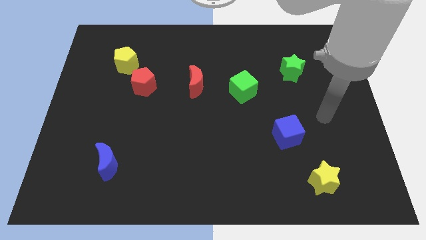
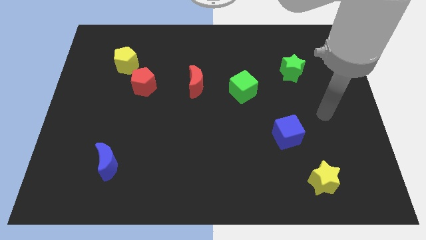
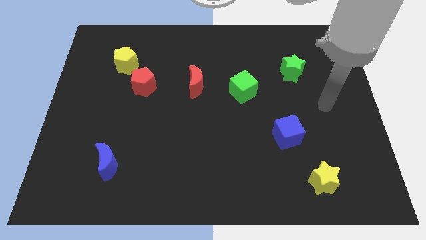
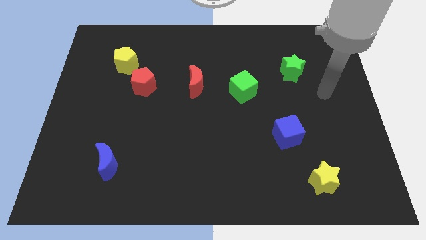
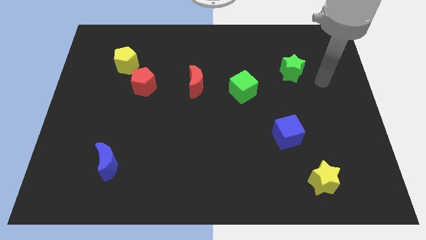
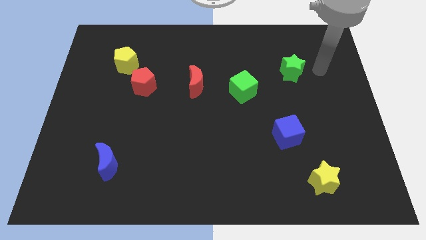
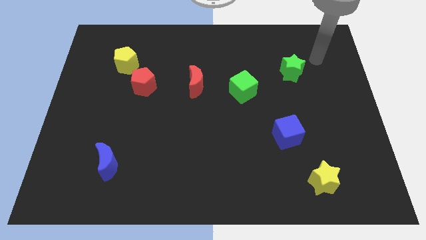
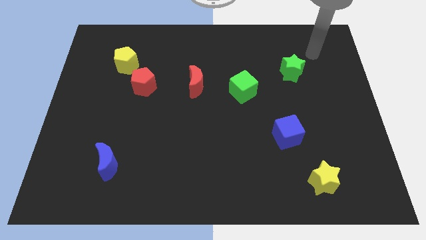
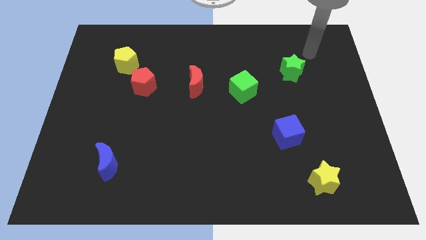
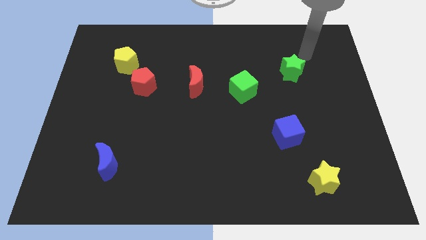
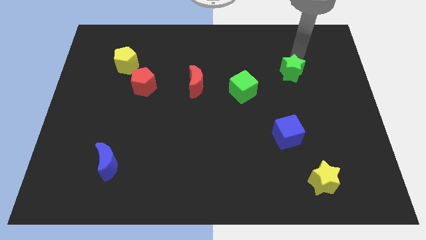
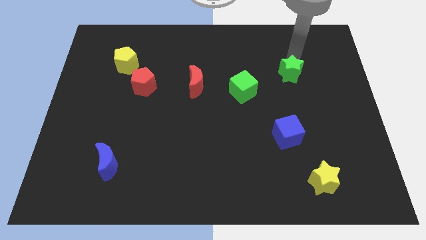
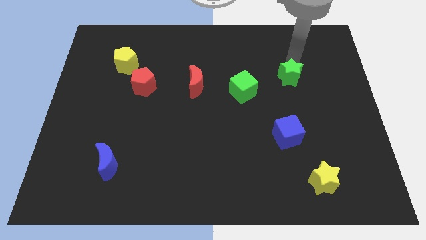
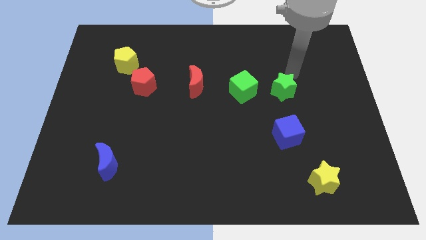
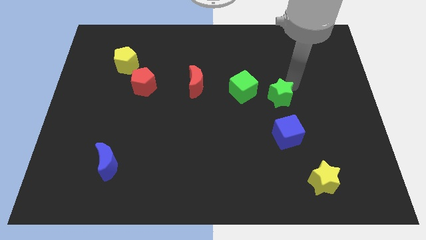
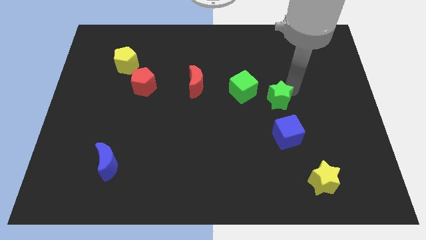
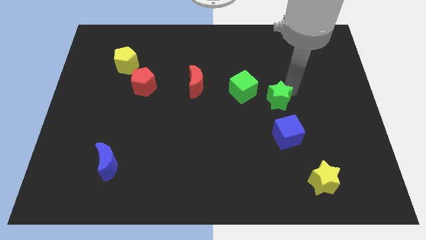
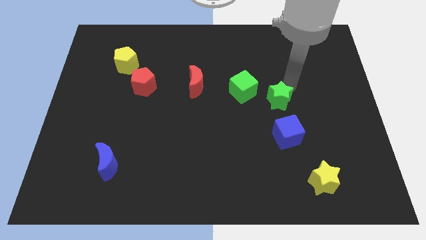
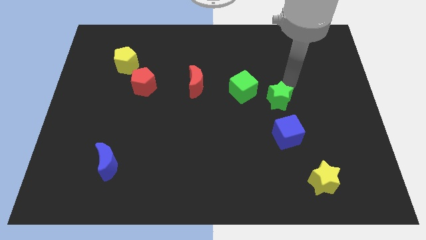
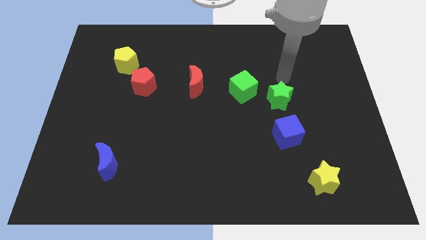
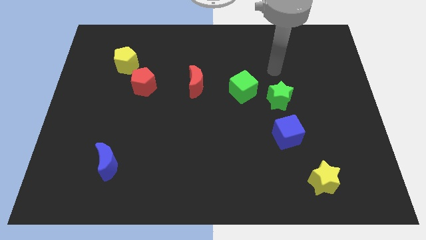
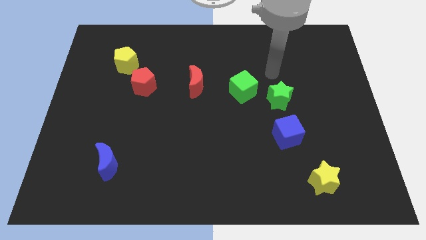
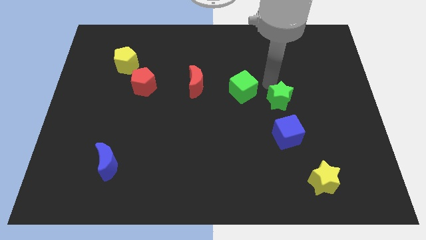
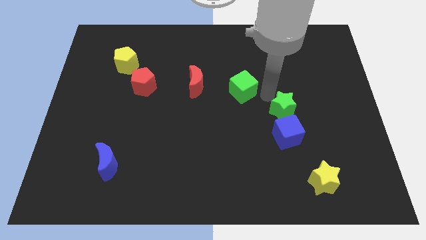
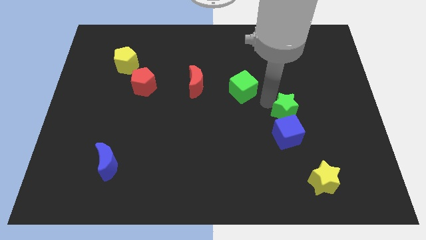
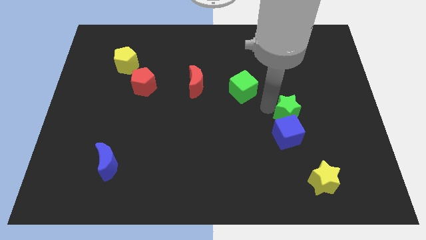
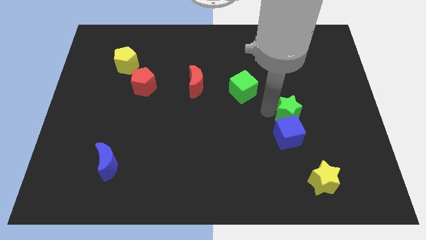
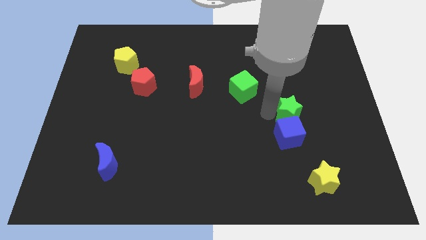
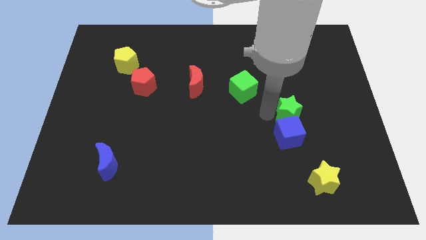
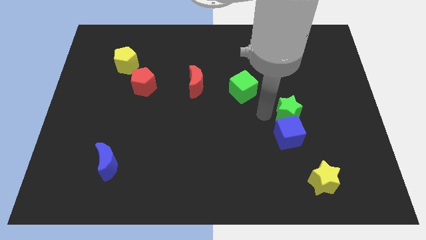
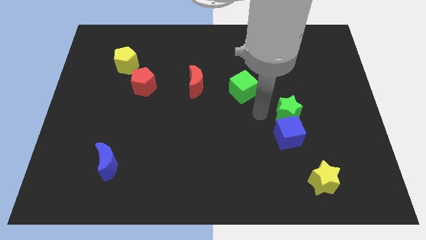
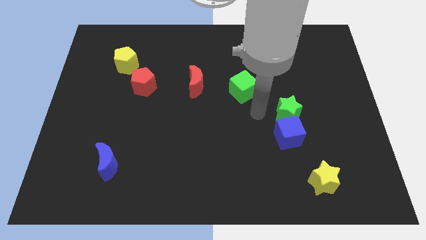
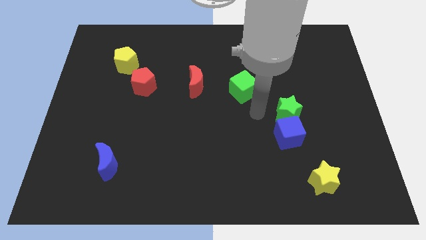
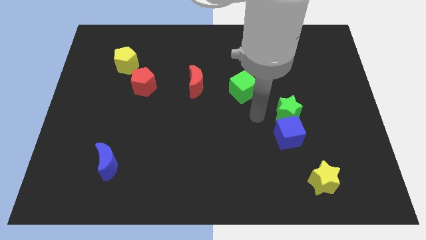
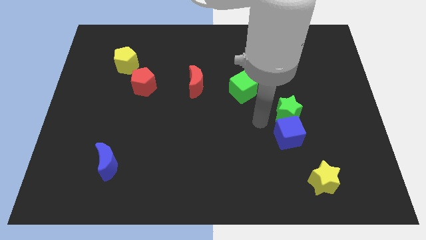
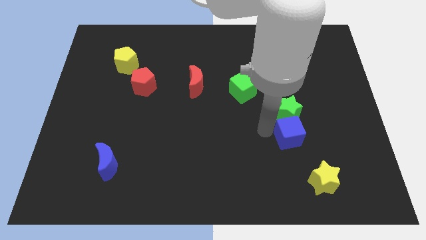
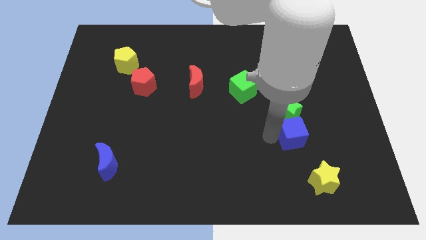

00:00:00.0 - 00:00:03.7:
push the green star to the top of the blue cube

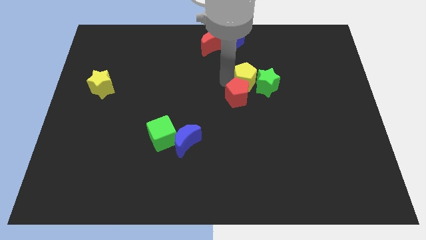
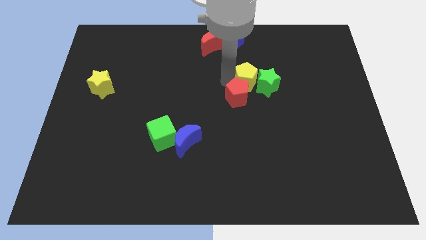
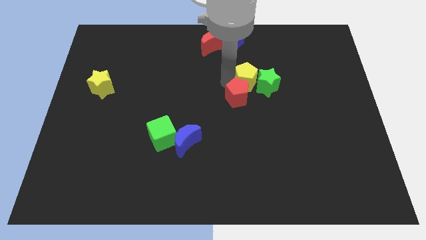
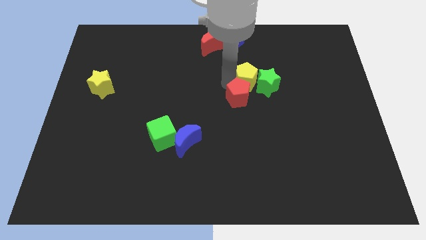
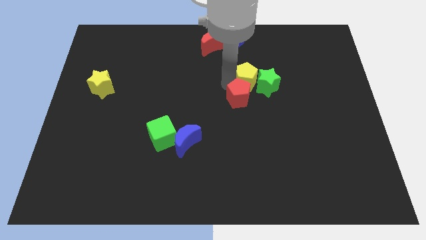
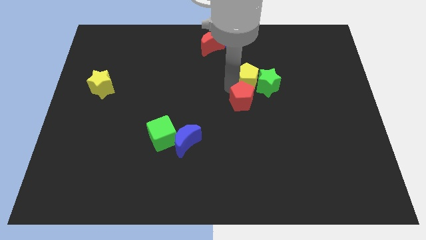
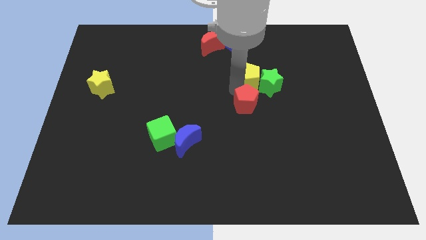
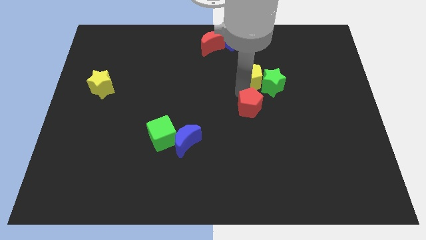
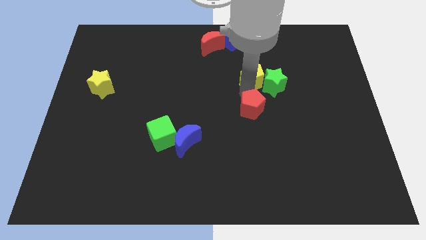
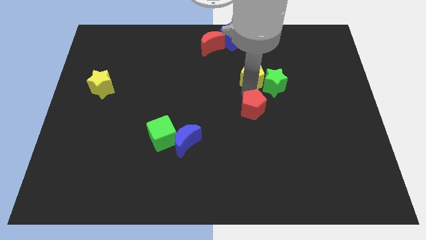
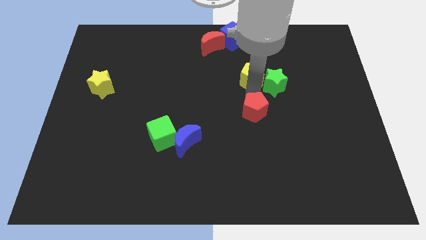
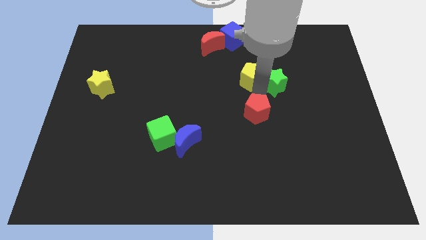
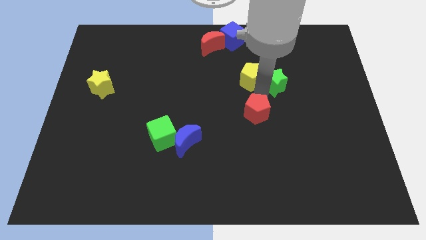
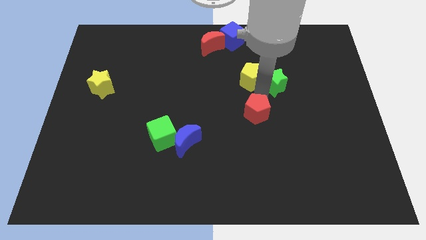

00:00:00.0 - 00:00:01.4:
separate the red pentagon from the yellow pentagon

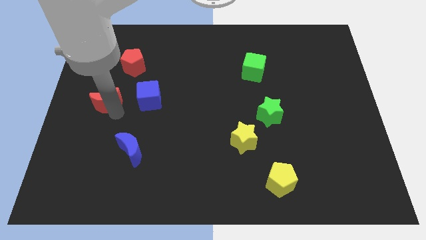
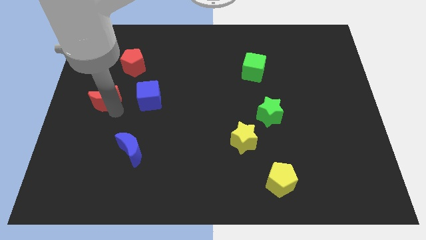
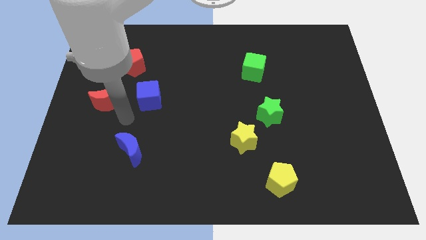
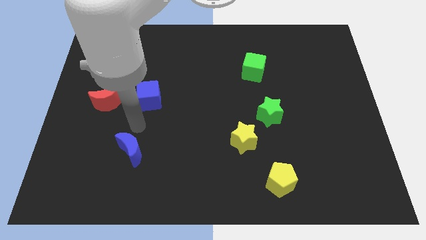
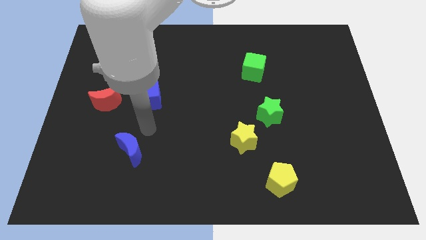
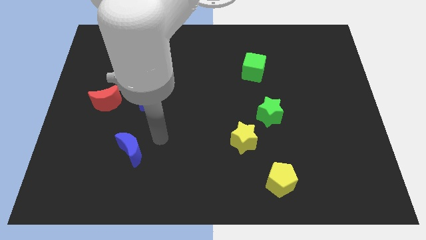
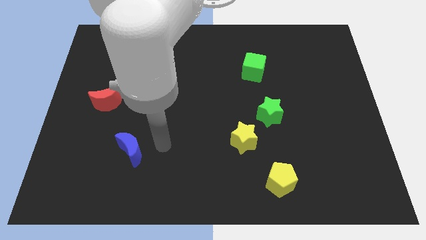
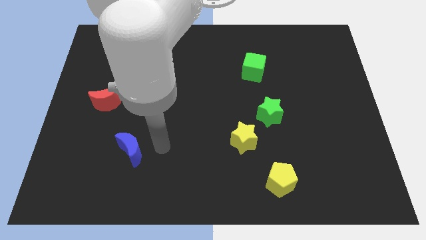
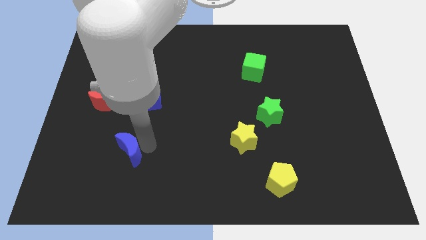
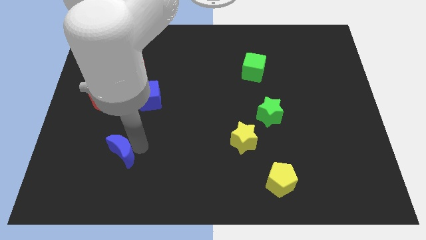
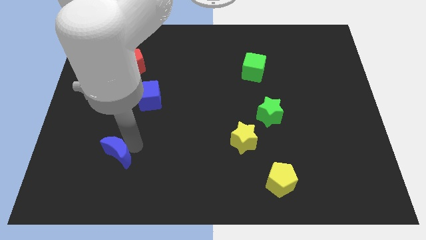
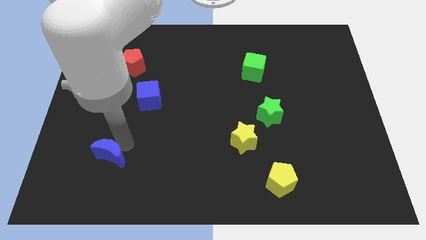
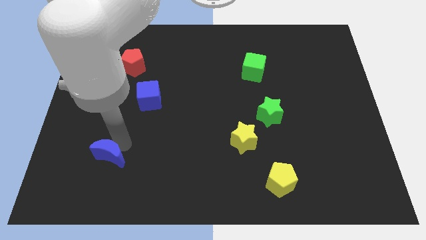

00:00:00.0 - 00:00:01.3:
push the blue crescent slightly to the left

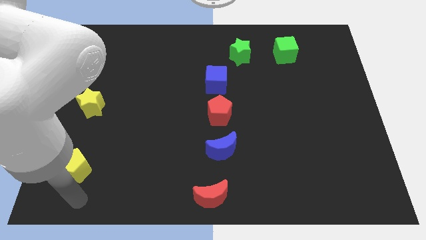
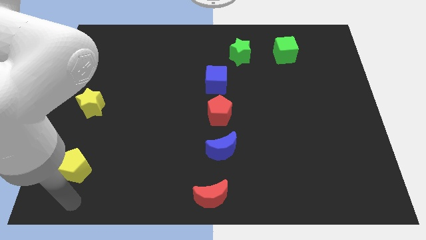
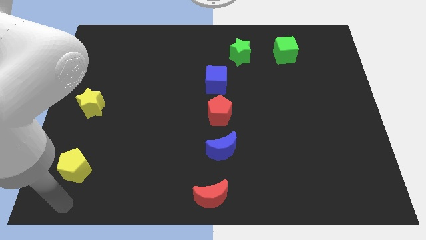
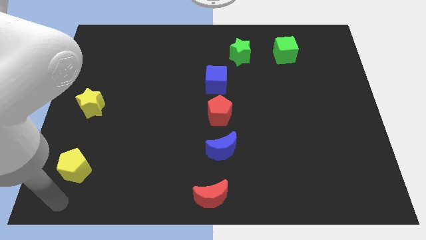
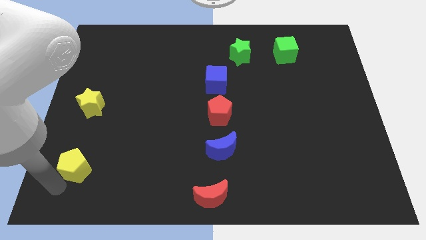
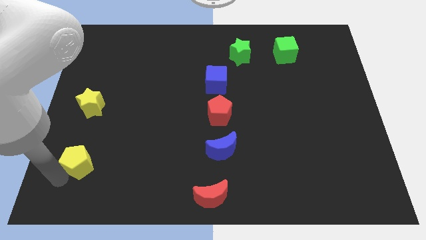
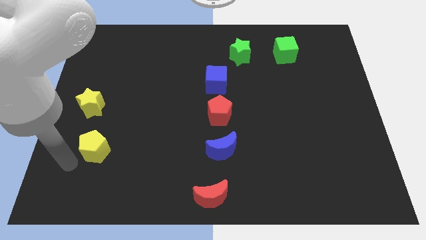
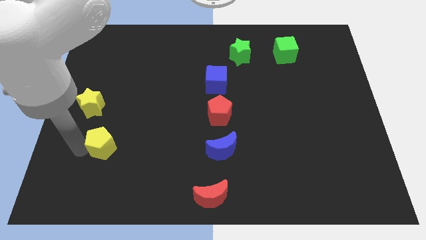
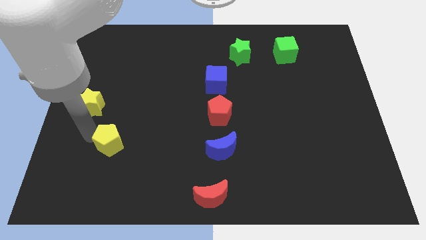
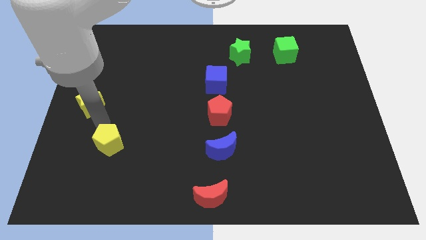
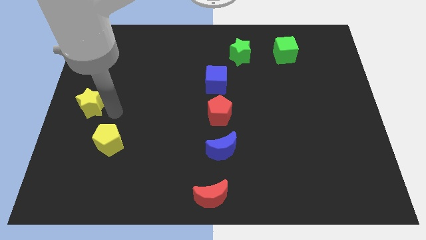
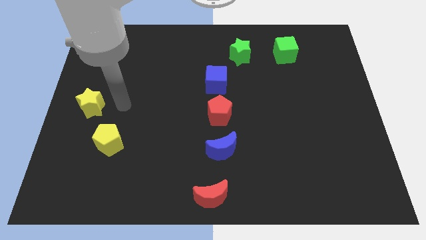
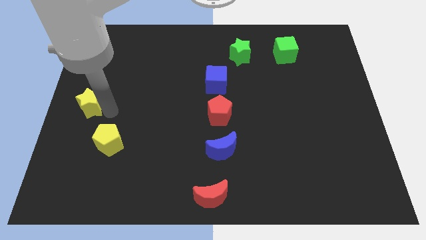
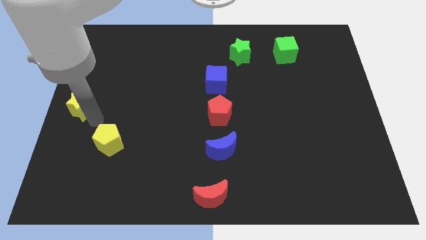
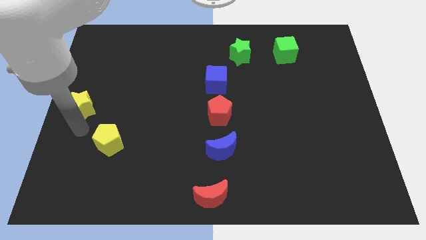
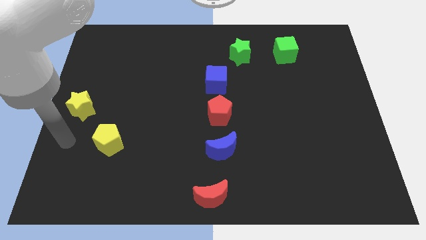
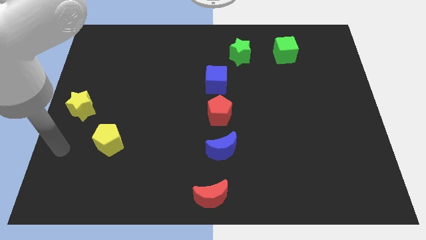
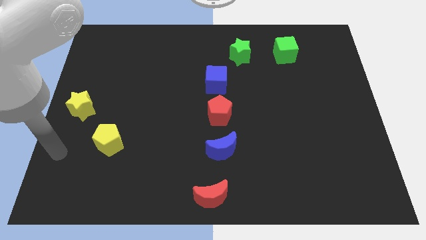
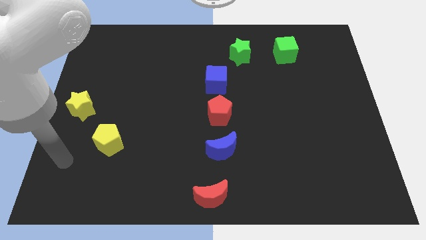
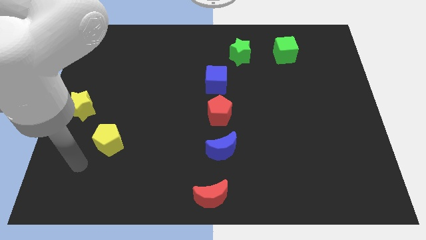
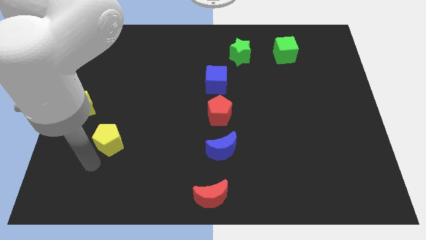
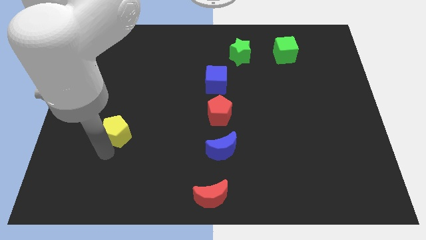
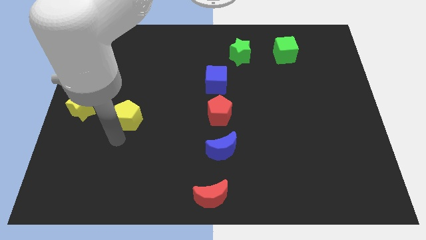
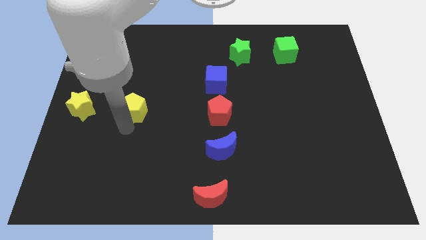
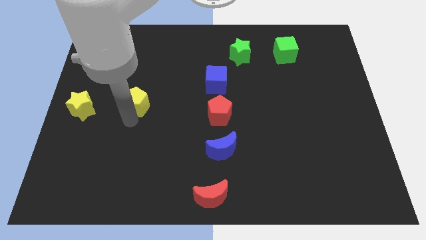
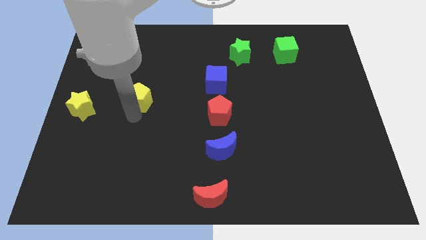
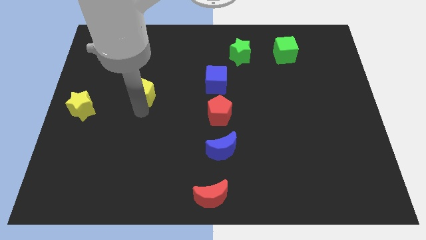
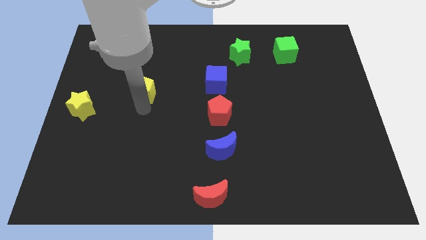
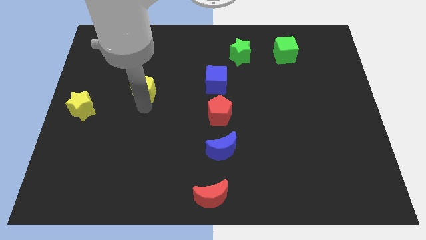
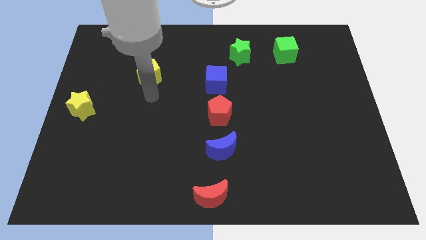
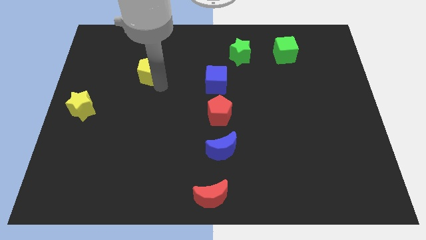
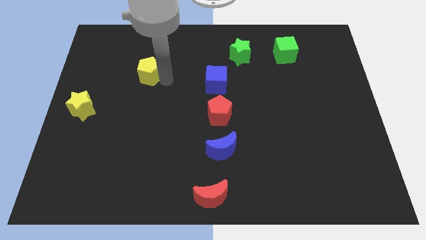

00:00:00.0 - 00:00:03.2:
slide the yellow pentagon slightly towards the left of the blue cube
